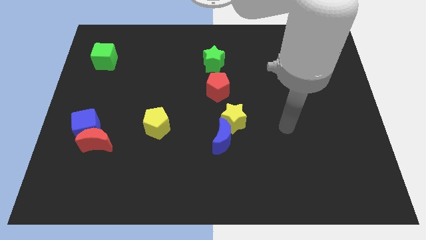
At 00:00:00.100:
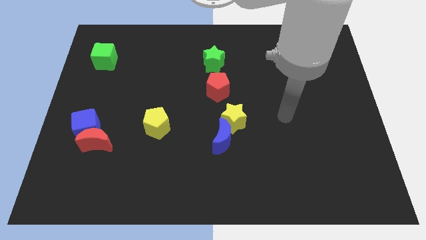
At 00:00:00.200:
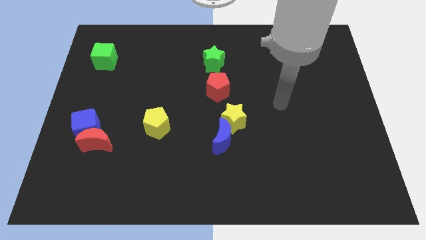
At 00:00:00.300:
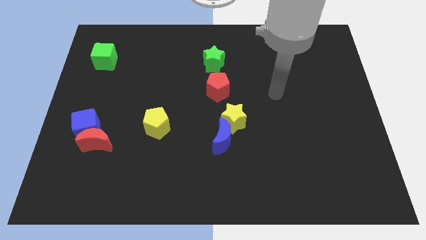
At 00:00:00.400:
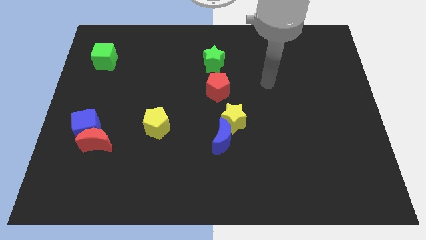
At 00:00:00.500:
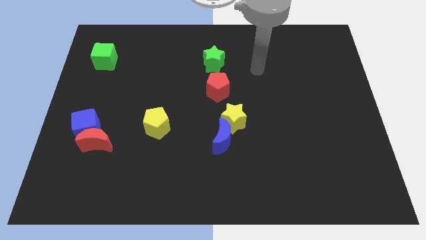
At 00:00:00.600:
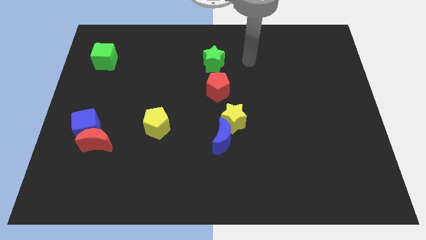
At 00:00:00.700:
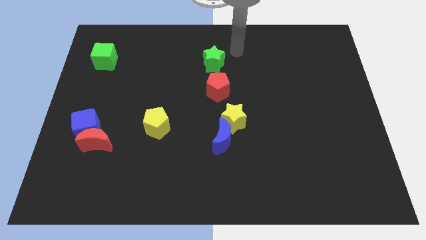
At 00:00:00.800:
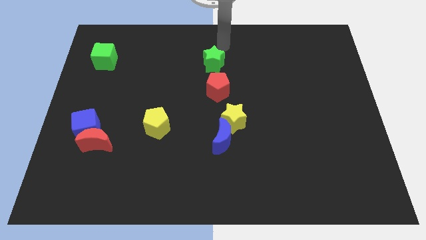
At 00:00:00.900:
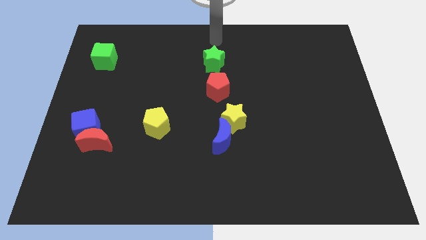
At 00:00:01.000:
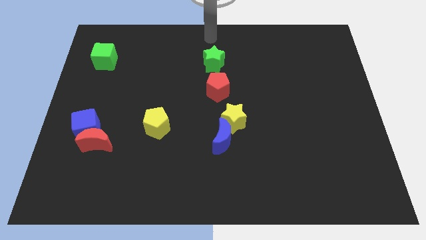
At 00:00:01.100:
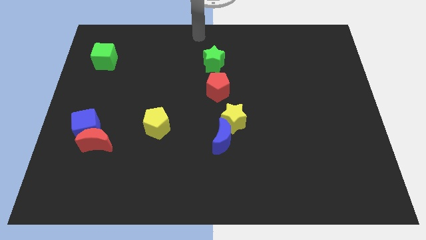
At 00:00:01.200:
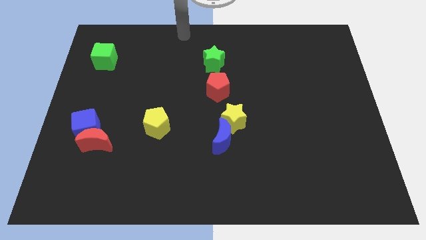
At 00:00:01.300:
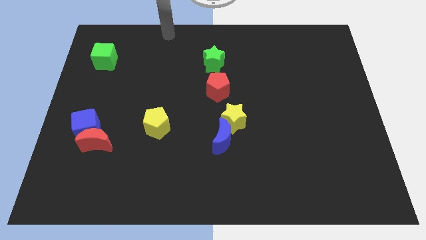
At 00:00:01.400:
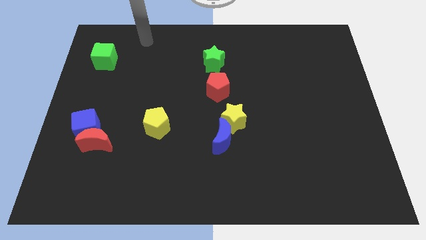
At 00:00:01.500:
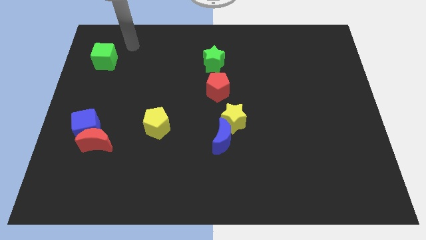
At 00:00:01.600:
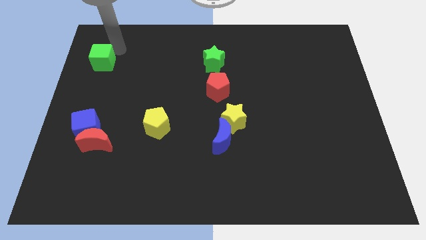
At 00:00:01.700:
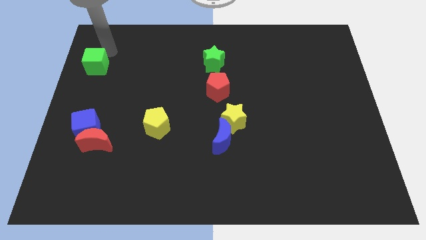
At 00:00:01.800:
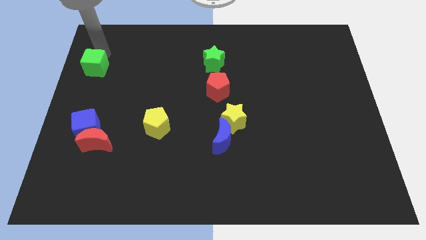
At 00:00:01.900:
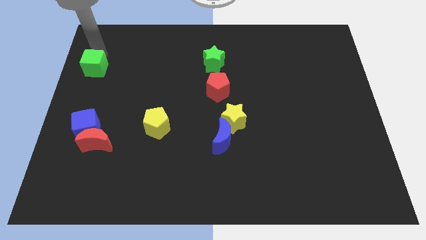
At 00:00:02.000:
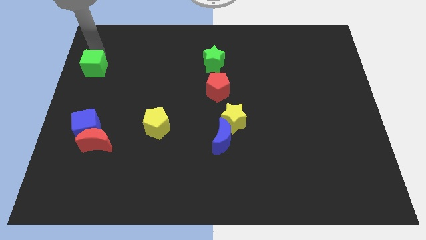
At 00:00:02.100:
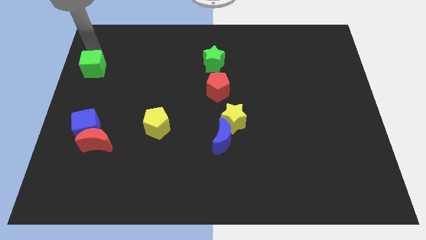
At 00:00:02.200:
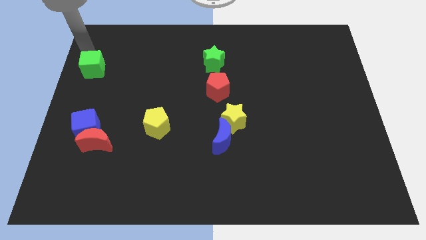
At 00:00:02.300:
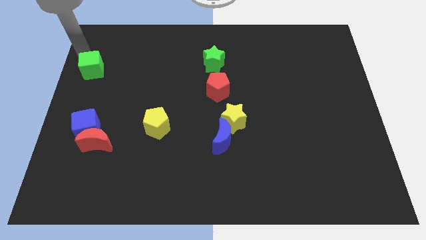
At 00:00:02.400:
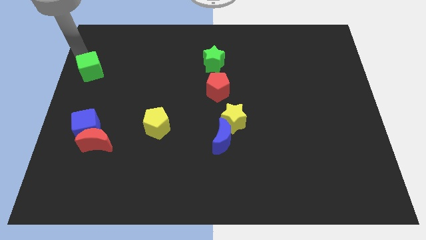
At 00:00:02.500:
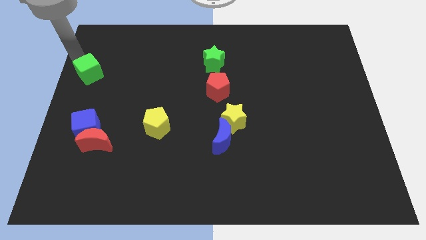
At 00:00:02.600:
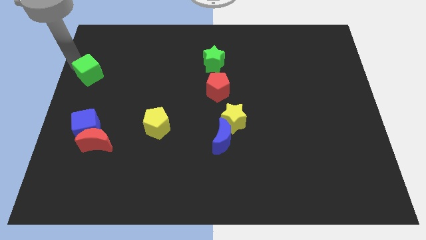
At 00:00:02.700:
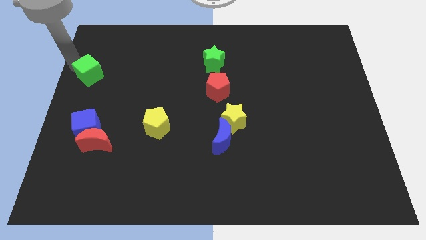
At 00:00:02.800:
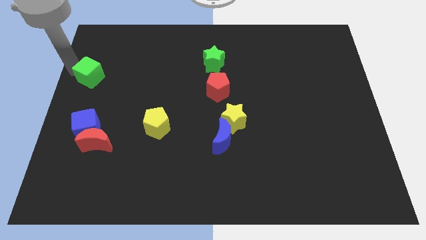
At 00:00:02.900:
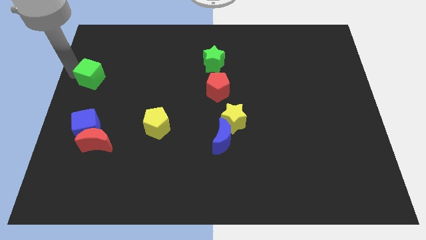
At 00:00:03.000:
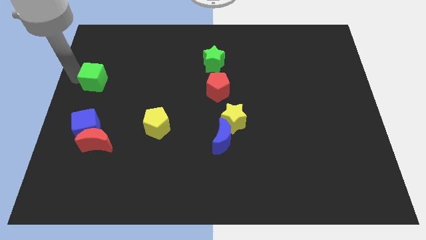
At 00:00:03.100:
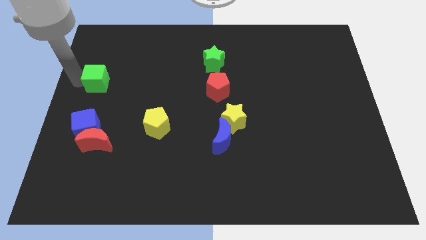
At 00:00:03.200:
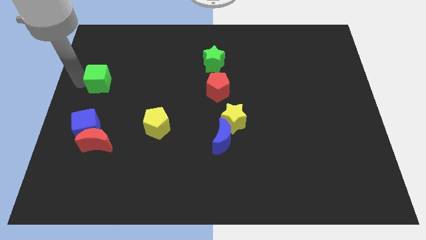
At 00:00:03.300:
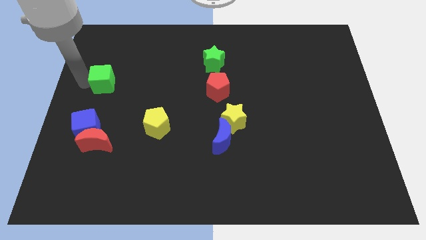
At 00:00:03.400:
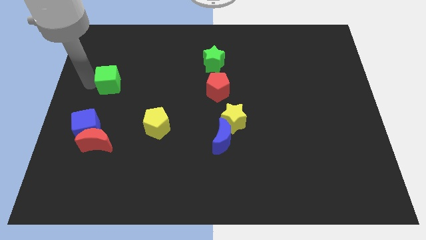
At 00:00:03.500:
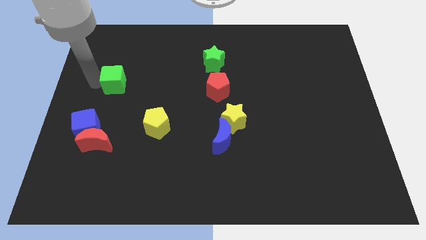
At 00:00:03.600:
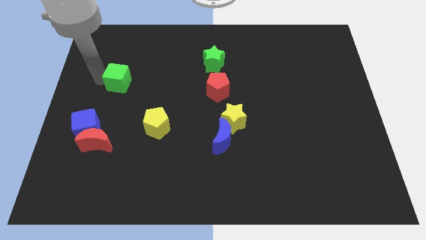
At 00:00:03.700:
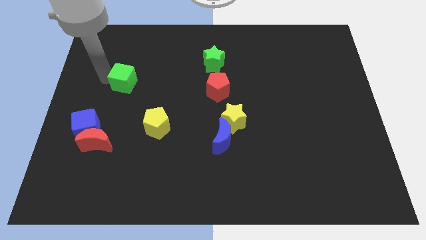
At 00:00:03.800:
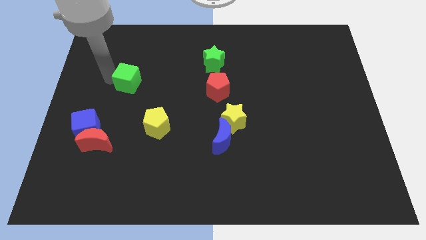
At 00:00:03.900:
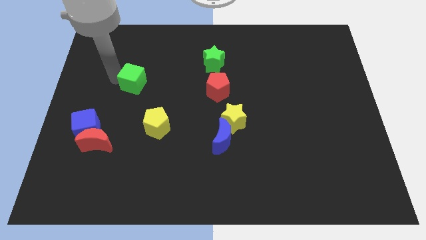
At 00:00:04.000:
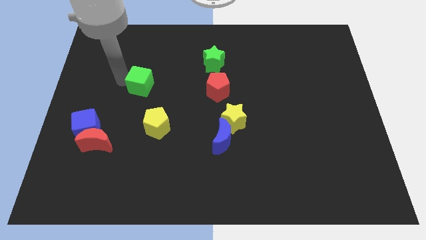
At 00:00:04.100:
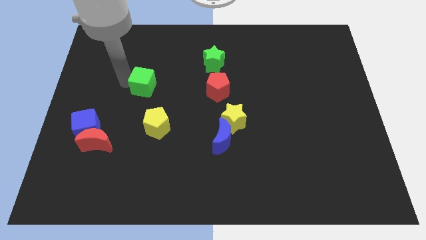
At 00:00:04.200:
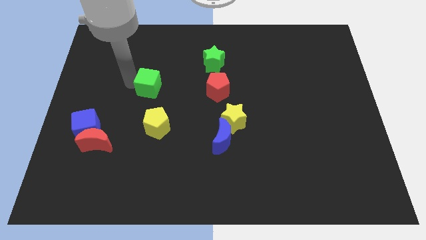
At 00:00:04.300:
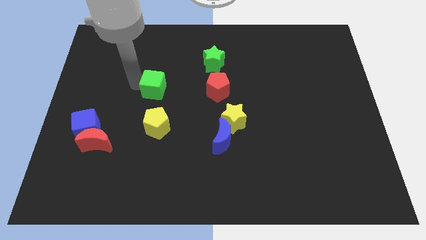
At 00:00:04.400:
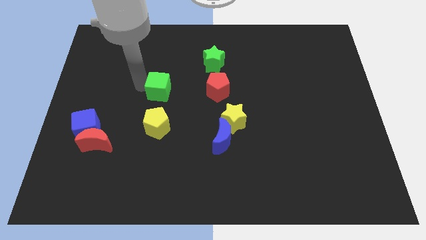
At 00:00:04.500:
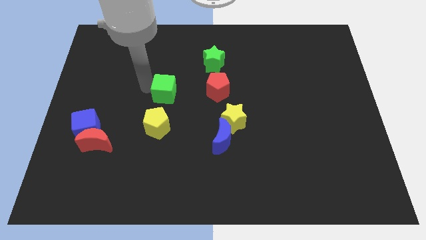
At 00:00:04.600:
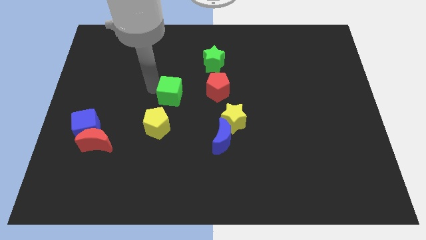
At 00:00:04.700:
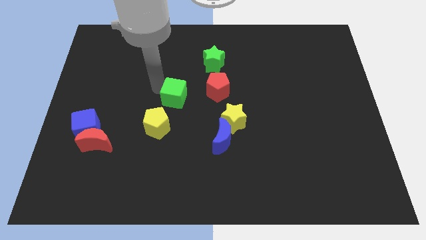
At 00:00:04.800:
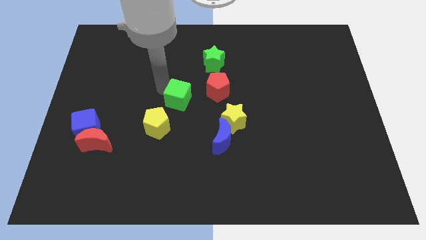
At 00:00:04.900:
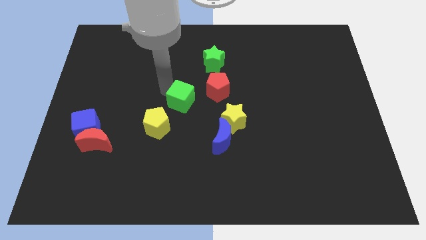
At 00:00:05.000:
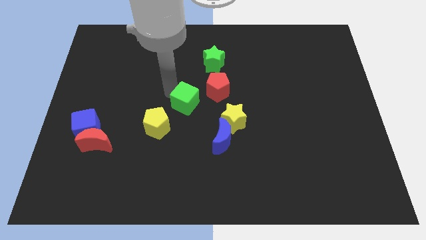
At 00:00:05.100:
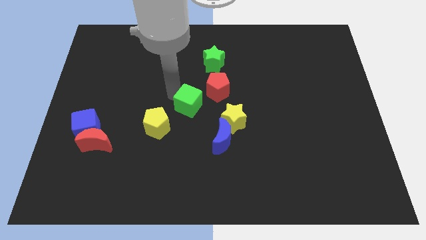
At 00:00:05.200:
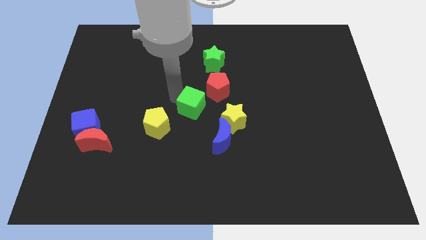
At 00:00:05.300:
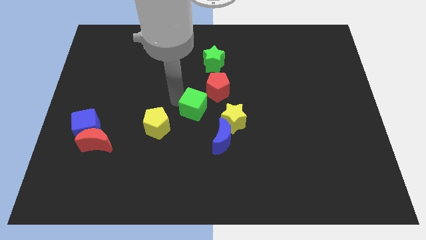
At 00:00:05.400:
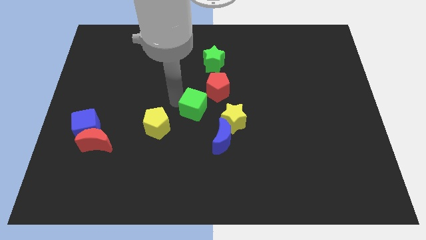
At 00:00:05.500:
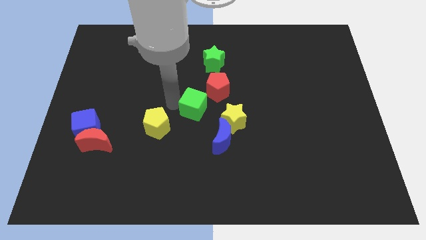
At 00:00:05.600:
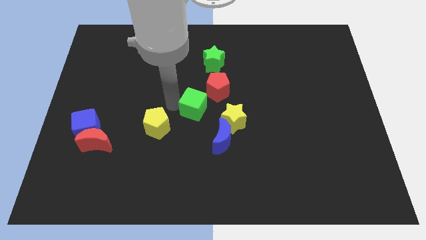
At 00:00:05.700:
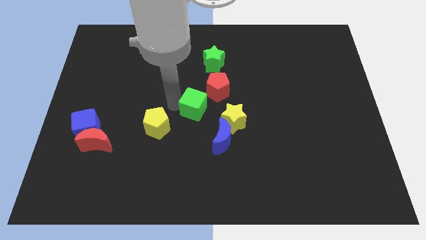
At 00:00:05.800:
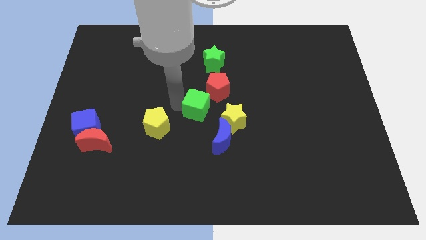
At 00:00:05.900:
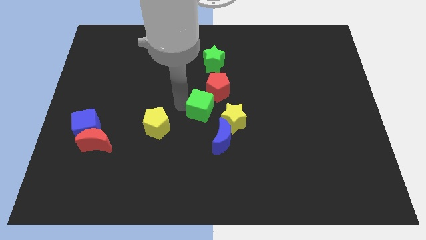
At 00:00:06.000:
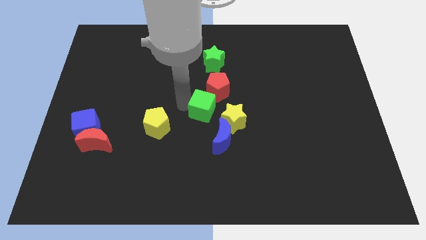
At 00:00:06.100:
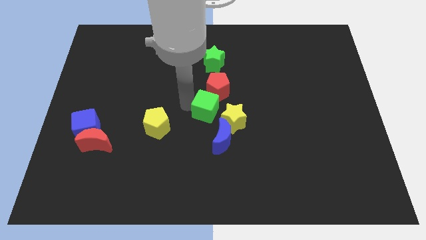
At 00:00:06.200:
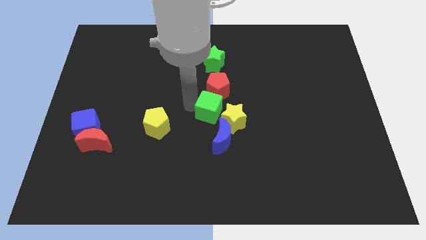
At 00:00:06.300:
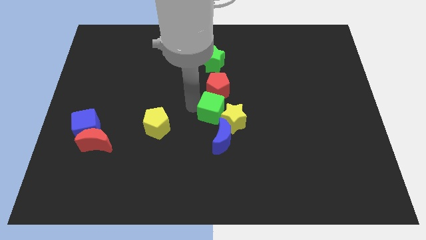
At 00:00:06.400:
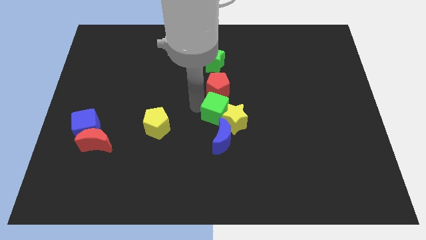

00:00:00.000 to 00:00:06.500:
push the green cube next to the yellow star

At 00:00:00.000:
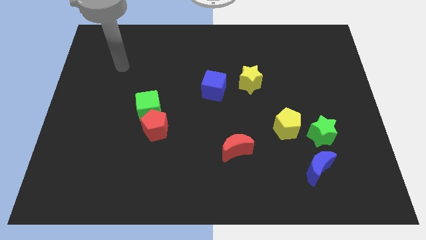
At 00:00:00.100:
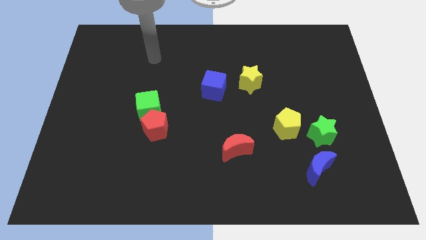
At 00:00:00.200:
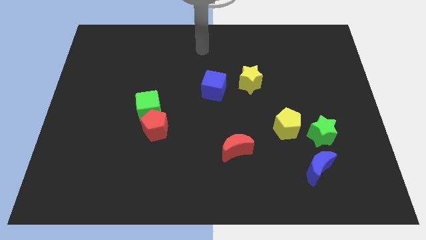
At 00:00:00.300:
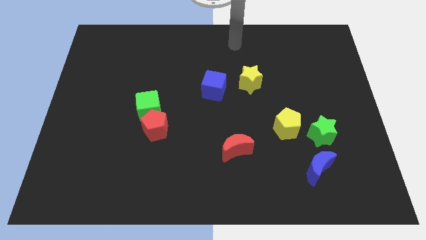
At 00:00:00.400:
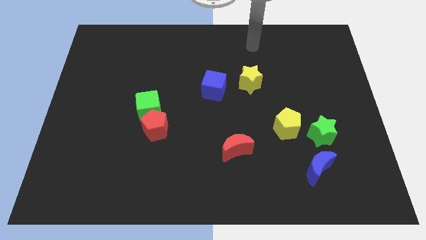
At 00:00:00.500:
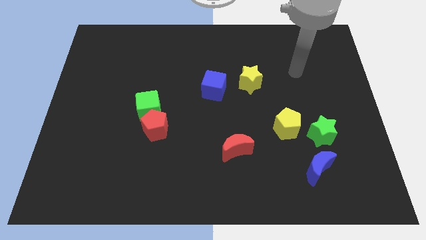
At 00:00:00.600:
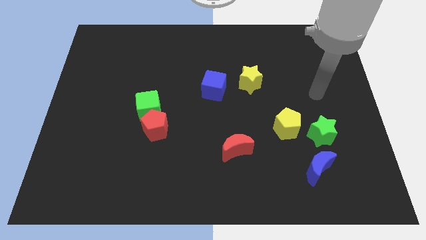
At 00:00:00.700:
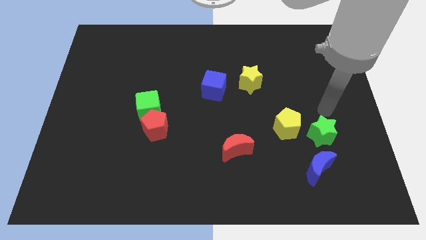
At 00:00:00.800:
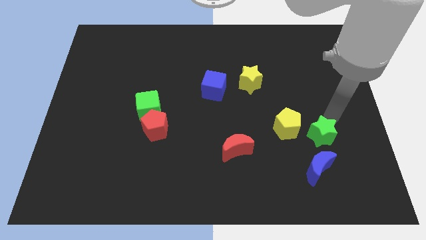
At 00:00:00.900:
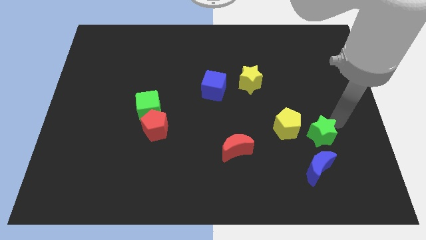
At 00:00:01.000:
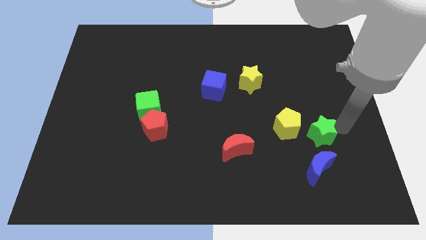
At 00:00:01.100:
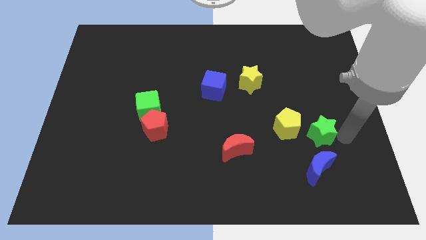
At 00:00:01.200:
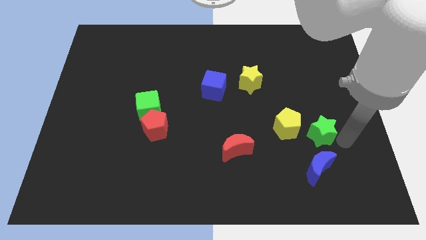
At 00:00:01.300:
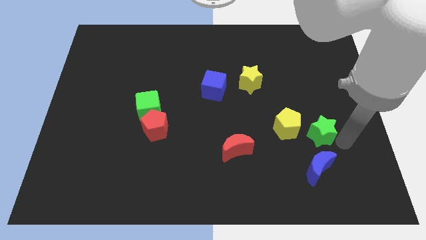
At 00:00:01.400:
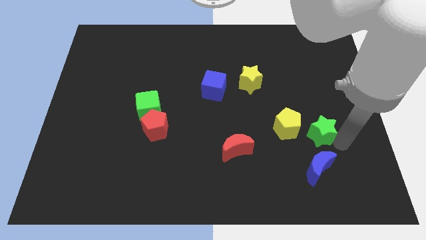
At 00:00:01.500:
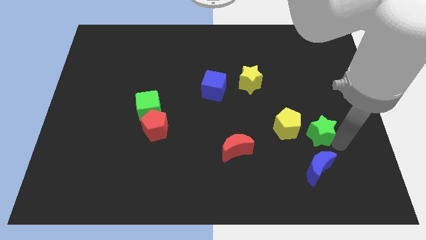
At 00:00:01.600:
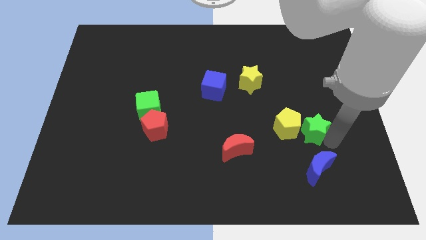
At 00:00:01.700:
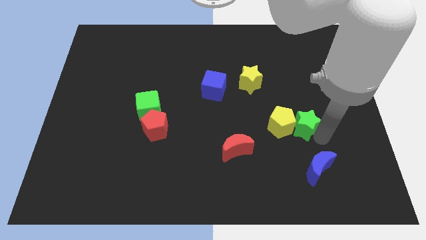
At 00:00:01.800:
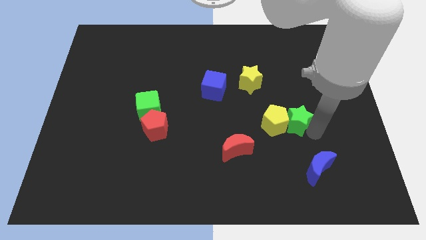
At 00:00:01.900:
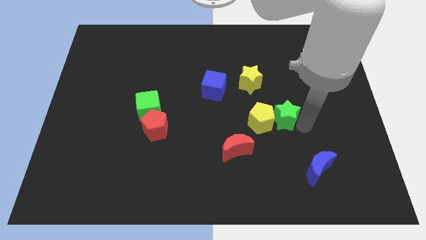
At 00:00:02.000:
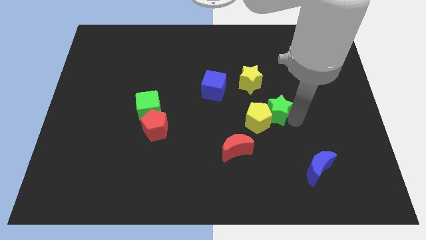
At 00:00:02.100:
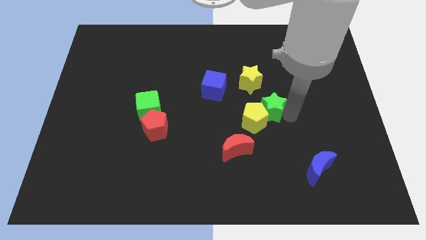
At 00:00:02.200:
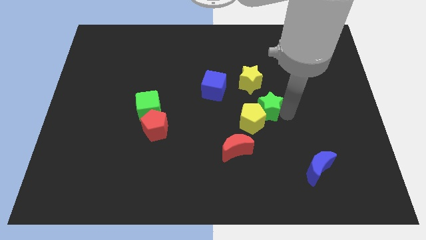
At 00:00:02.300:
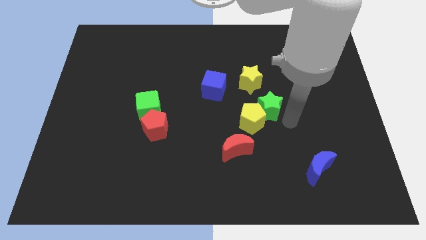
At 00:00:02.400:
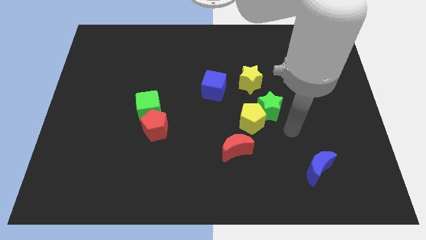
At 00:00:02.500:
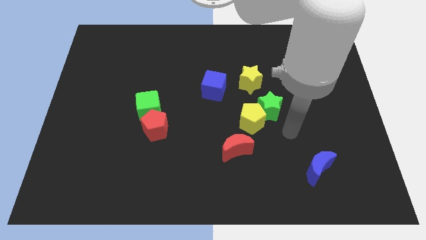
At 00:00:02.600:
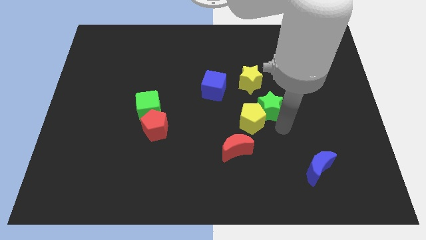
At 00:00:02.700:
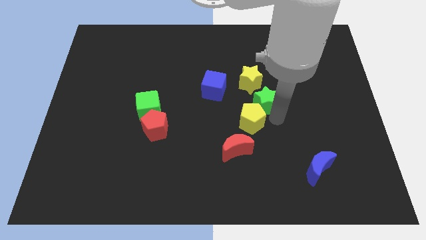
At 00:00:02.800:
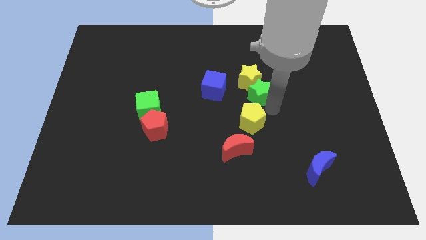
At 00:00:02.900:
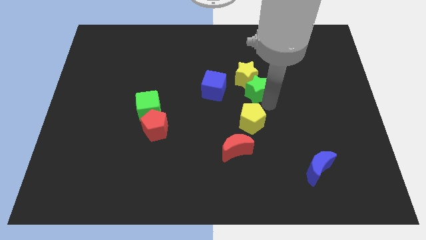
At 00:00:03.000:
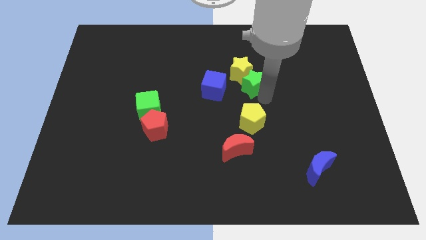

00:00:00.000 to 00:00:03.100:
push the green star to the yellow star
